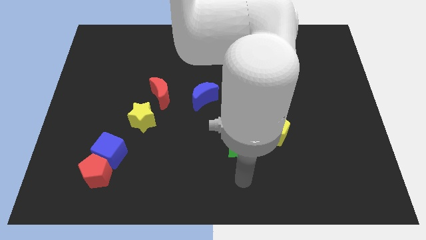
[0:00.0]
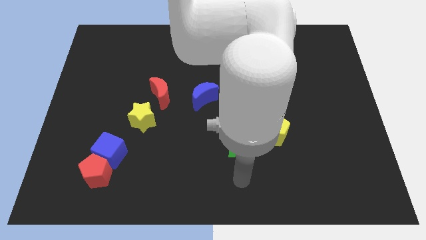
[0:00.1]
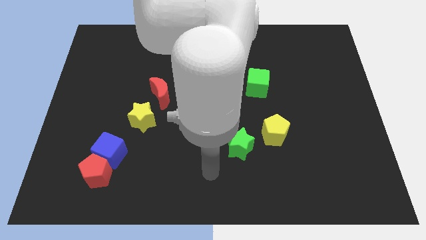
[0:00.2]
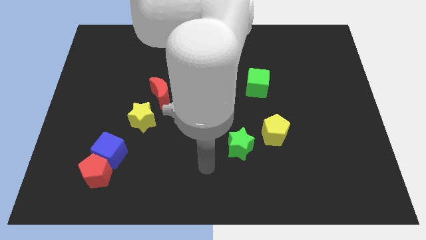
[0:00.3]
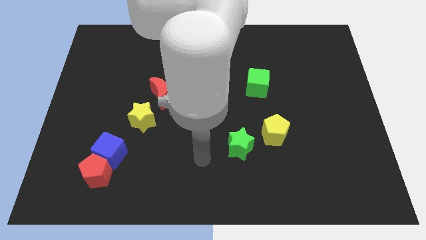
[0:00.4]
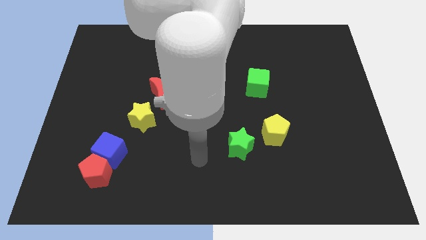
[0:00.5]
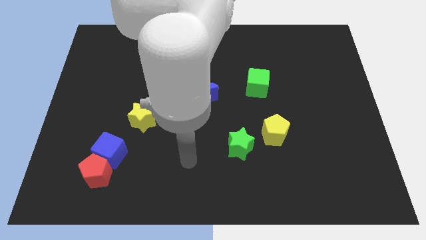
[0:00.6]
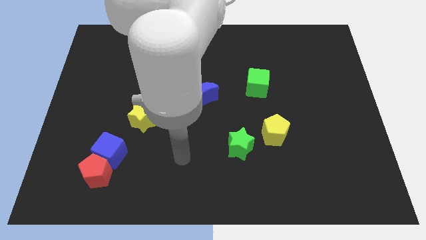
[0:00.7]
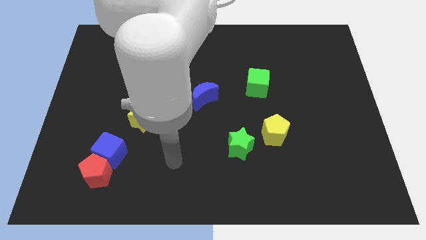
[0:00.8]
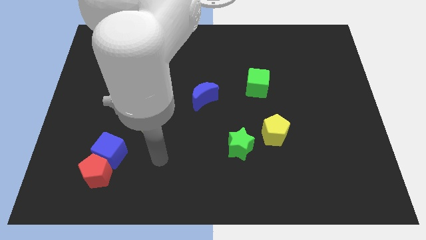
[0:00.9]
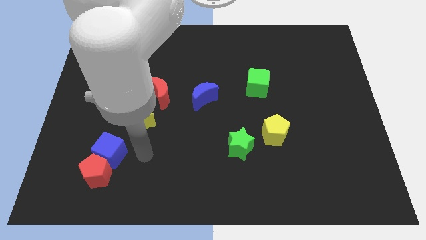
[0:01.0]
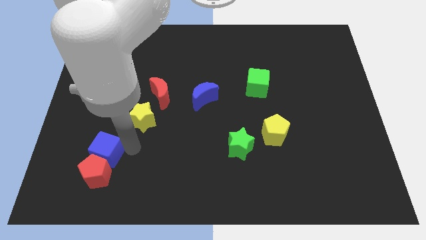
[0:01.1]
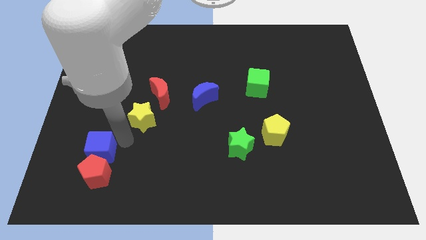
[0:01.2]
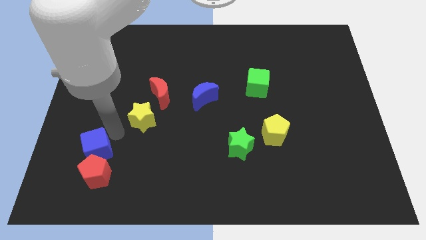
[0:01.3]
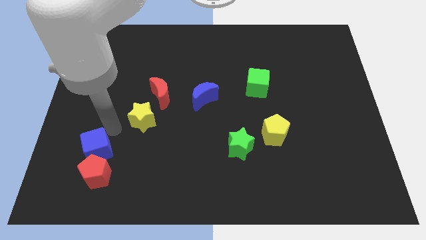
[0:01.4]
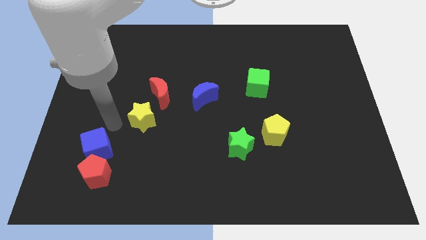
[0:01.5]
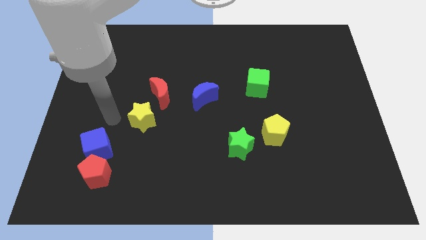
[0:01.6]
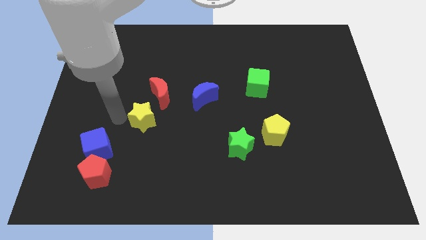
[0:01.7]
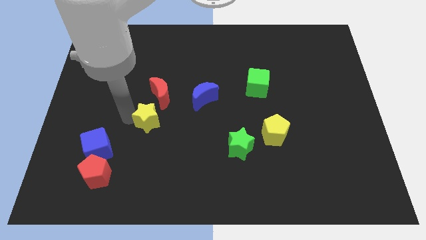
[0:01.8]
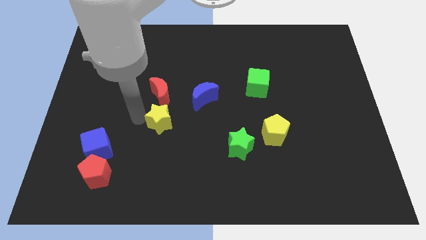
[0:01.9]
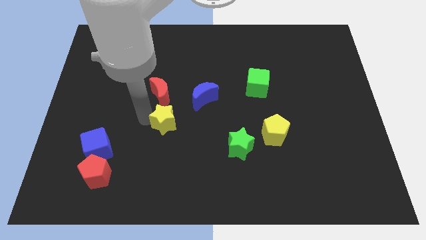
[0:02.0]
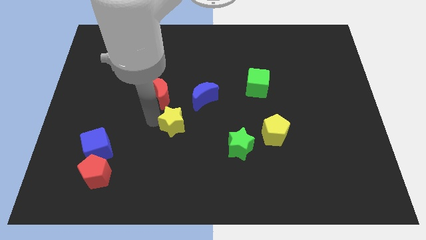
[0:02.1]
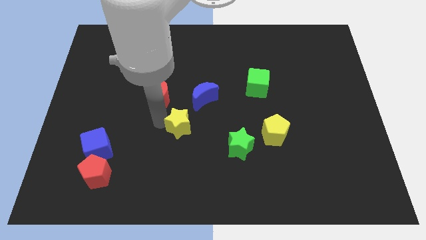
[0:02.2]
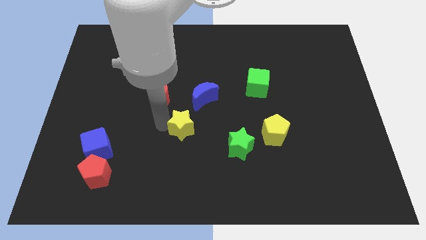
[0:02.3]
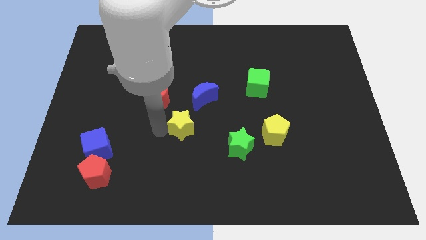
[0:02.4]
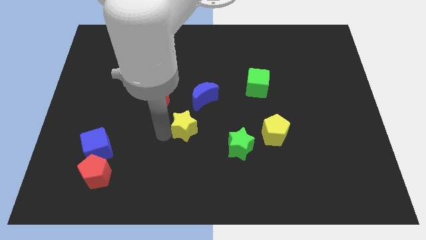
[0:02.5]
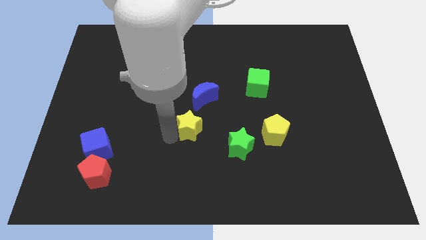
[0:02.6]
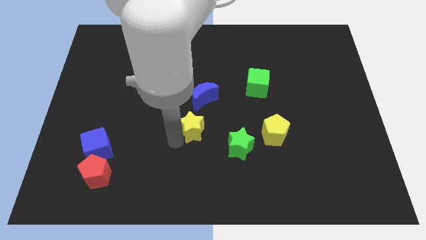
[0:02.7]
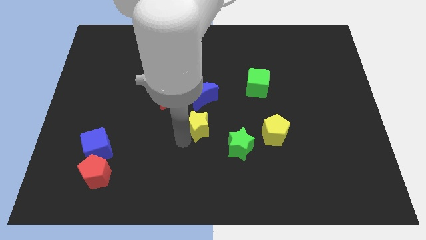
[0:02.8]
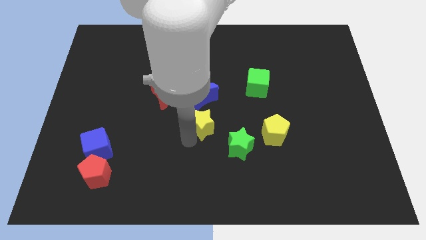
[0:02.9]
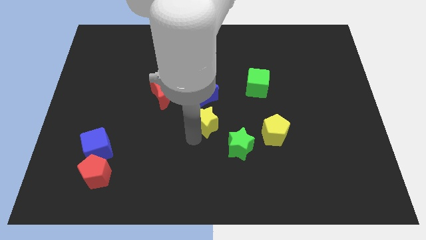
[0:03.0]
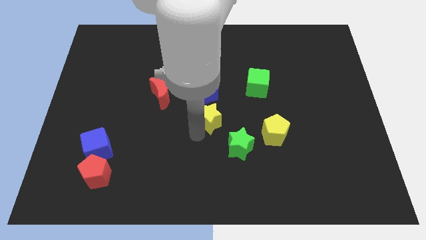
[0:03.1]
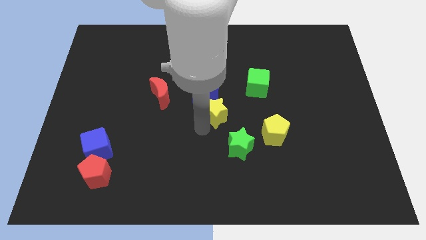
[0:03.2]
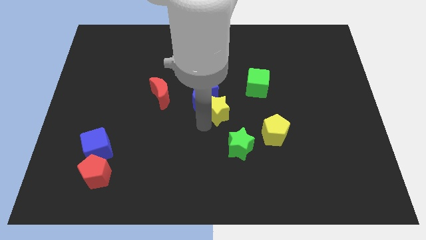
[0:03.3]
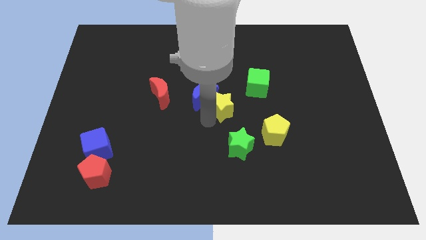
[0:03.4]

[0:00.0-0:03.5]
move the yellow star close to the blue moon

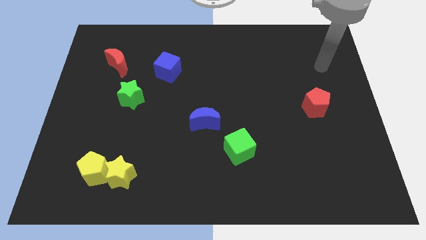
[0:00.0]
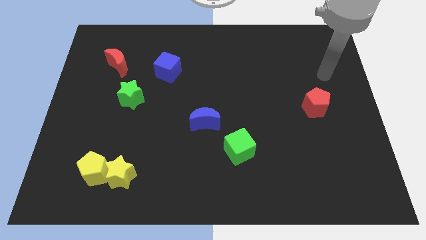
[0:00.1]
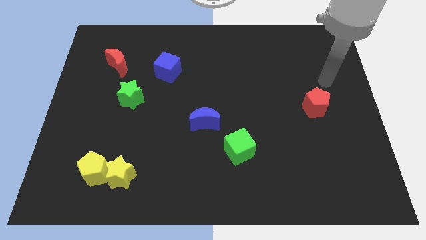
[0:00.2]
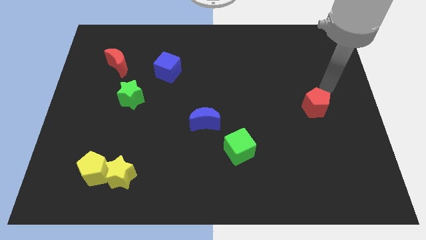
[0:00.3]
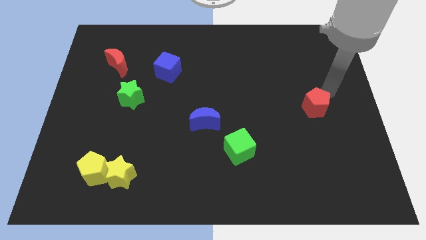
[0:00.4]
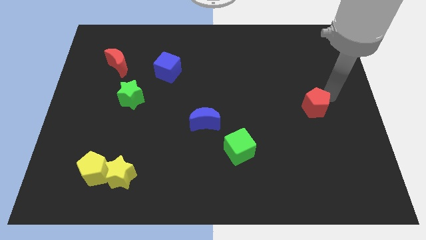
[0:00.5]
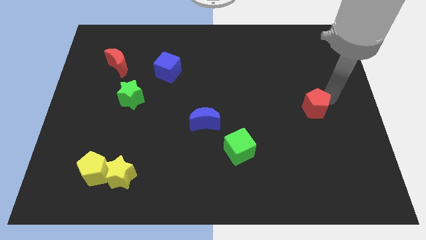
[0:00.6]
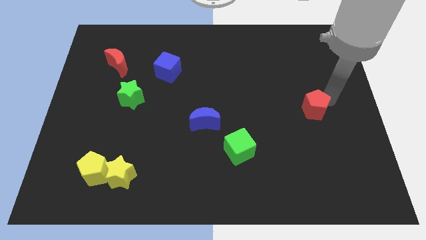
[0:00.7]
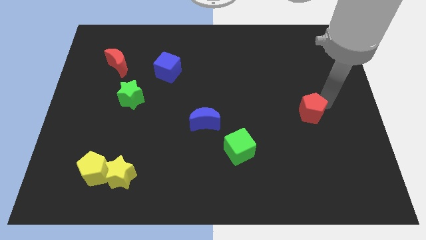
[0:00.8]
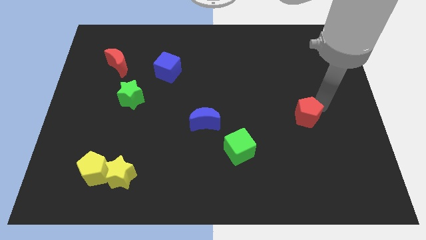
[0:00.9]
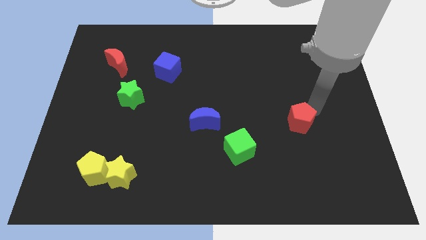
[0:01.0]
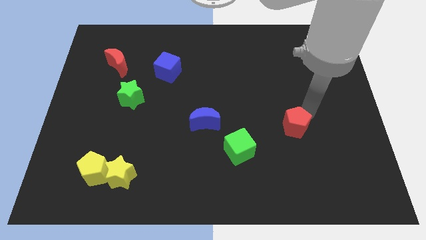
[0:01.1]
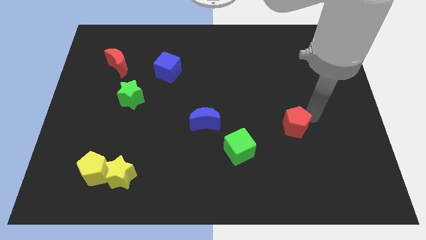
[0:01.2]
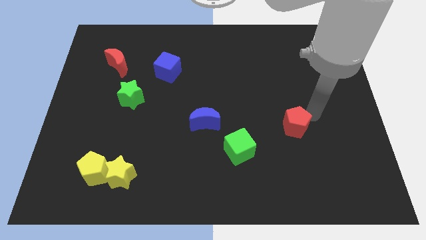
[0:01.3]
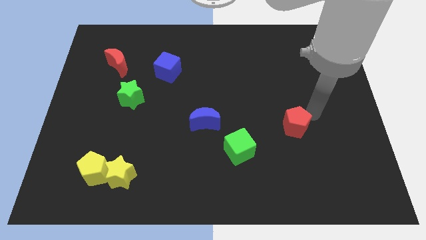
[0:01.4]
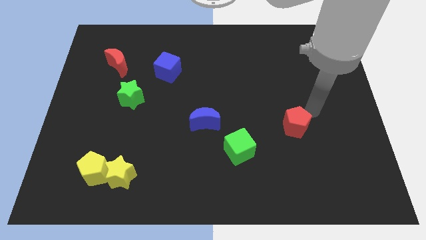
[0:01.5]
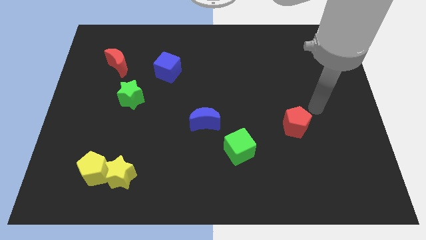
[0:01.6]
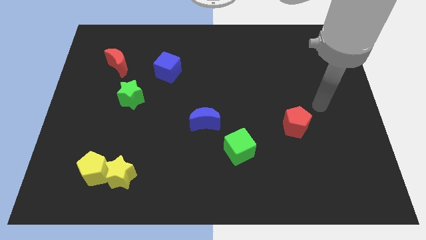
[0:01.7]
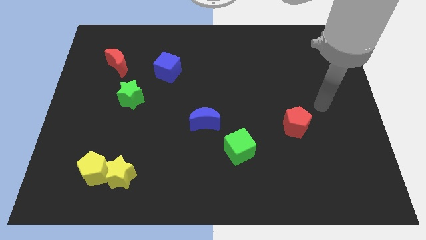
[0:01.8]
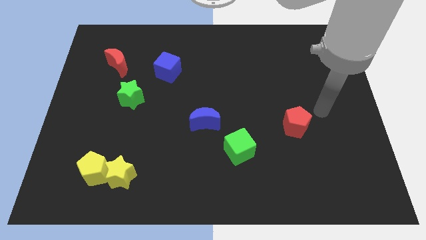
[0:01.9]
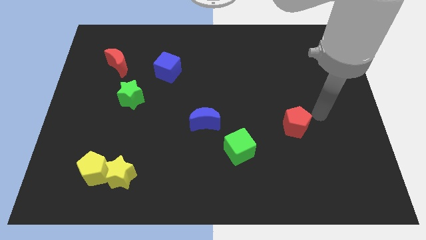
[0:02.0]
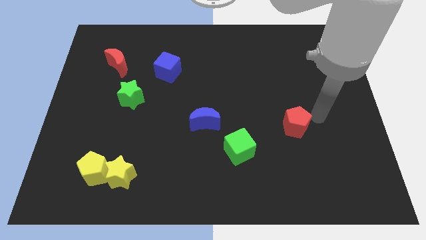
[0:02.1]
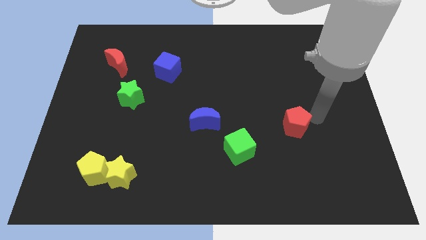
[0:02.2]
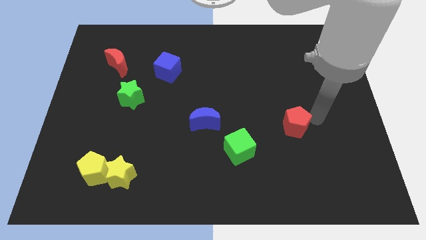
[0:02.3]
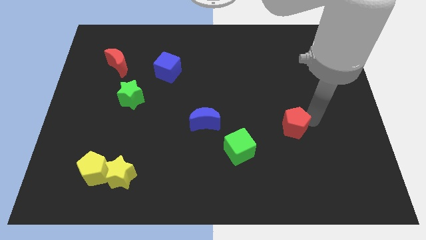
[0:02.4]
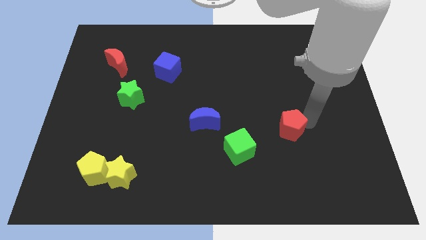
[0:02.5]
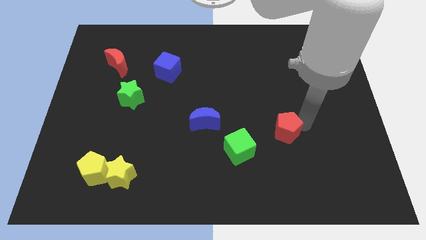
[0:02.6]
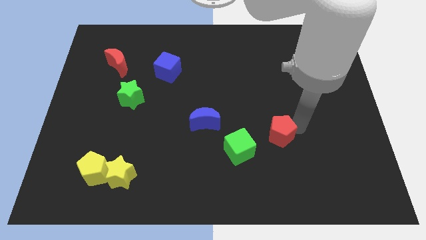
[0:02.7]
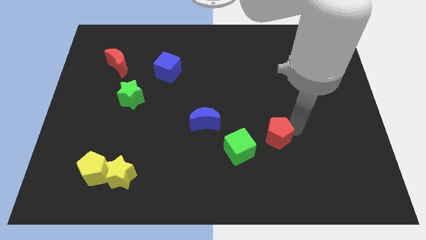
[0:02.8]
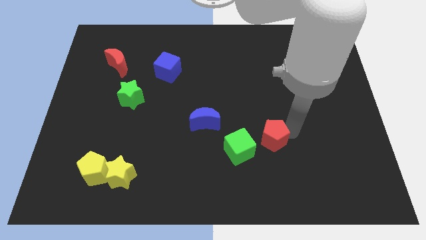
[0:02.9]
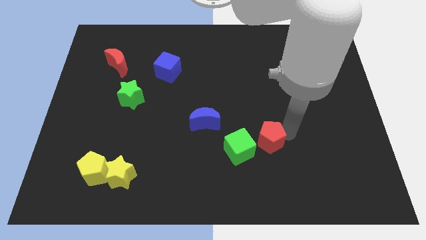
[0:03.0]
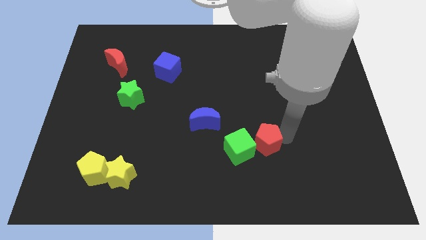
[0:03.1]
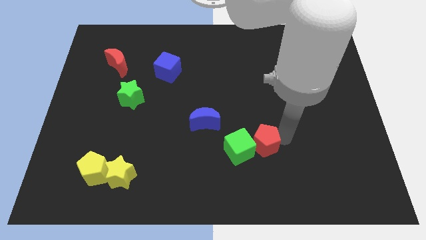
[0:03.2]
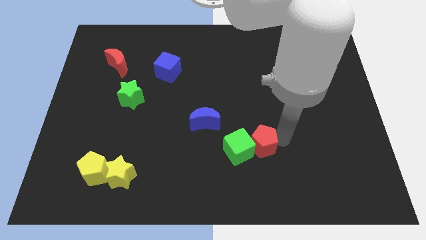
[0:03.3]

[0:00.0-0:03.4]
move the red pentagon to the green cube

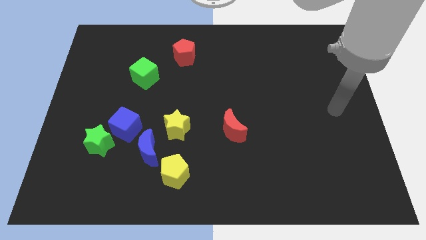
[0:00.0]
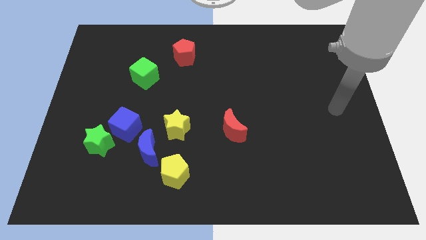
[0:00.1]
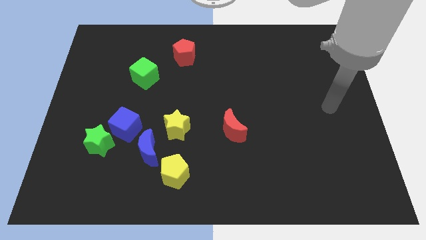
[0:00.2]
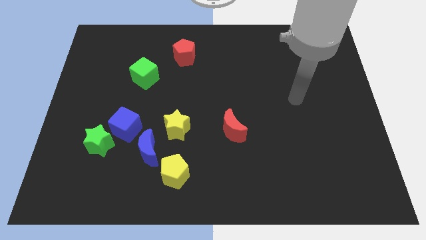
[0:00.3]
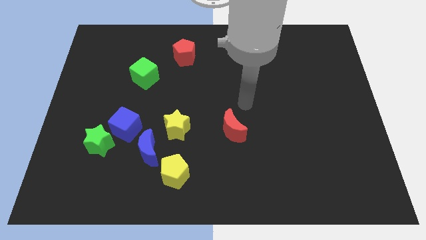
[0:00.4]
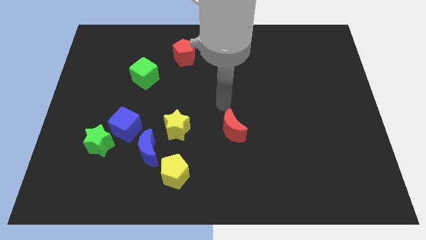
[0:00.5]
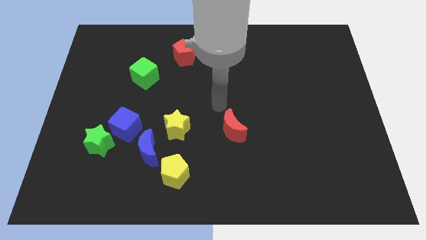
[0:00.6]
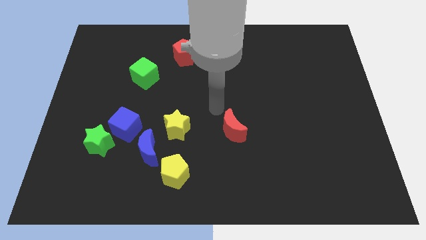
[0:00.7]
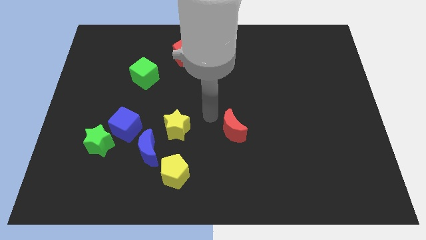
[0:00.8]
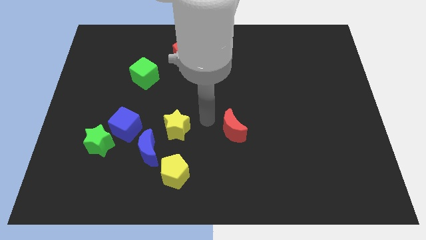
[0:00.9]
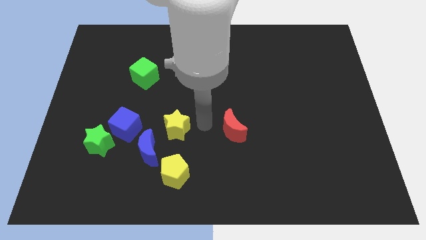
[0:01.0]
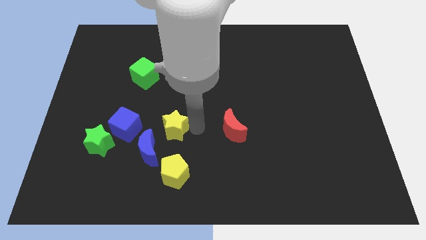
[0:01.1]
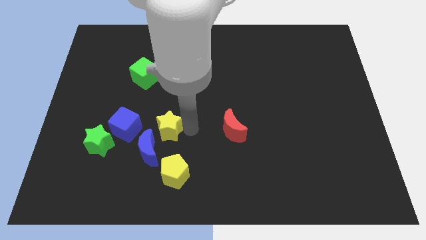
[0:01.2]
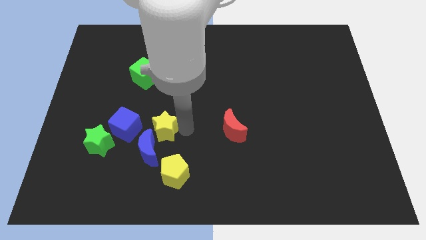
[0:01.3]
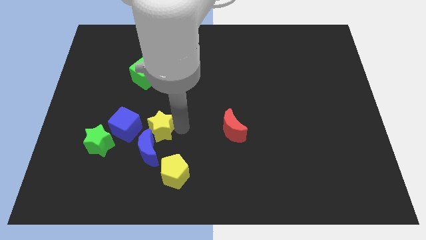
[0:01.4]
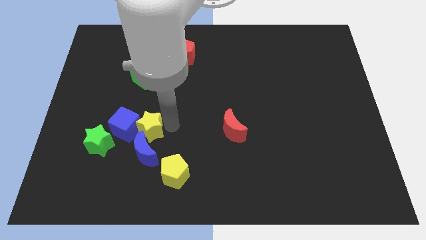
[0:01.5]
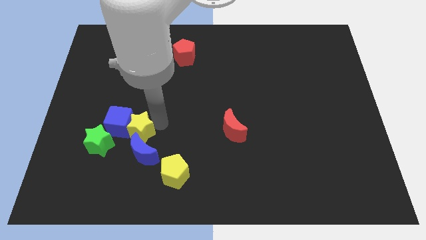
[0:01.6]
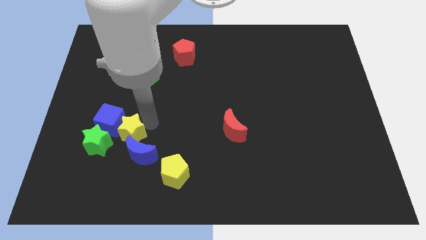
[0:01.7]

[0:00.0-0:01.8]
push the yellow star next to the blue cube

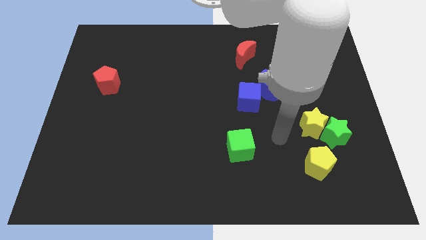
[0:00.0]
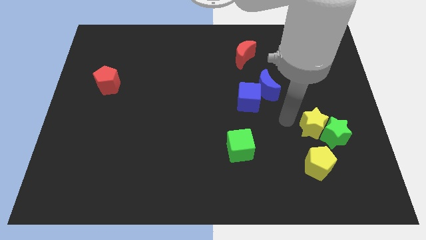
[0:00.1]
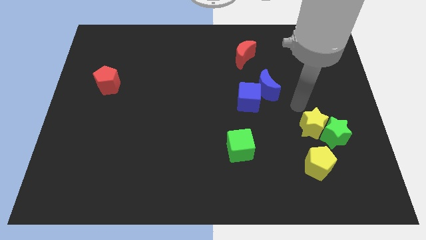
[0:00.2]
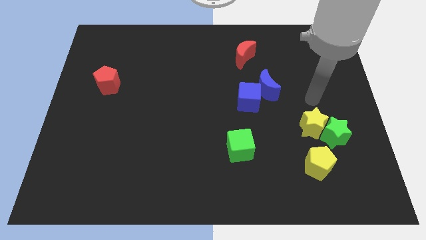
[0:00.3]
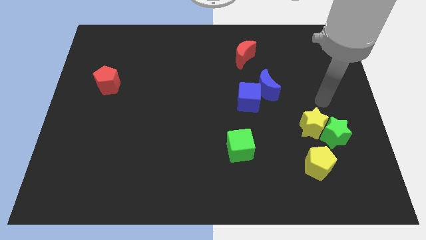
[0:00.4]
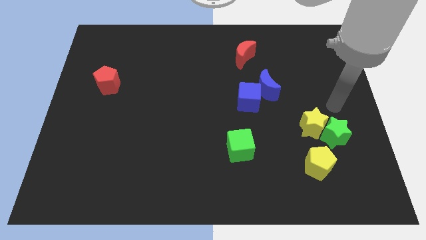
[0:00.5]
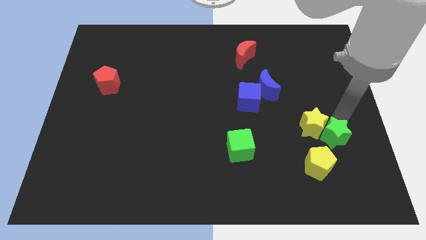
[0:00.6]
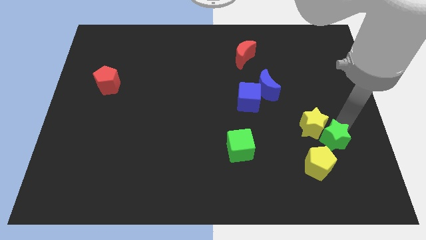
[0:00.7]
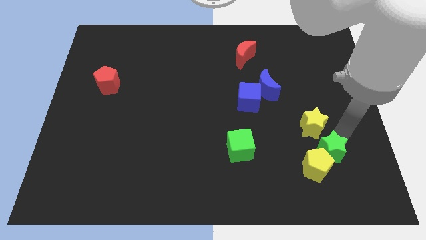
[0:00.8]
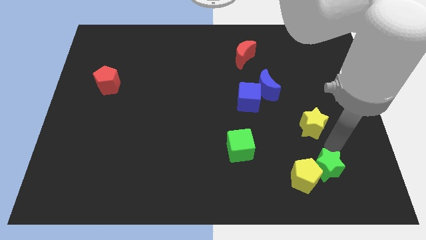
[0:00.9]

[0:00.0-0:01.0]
slide the green star close to the yellow pentagon
